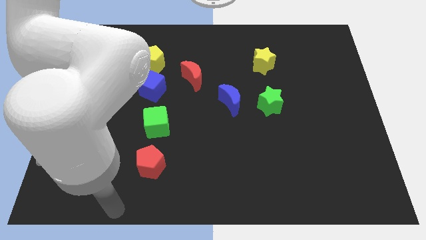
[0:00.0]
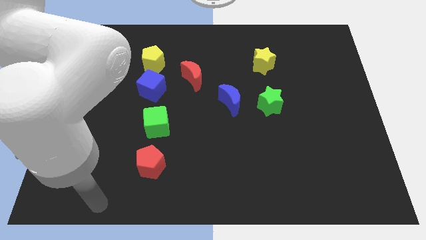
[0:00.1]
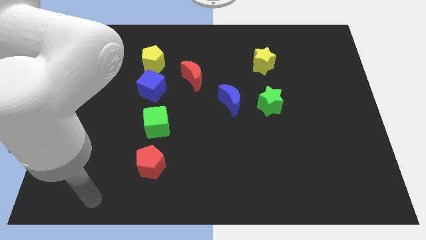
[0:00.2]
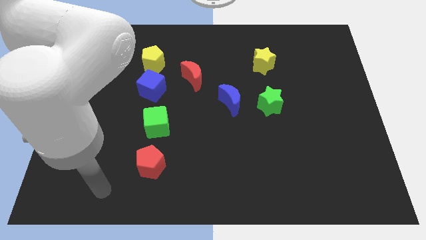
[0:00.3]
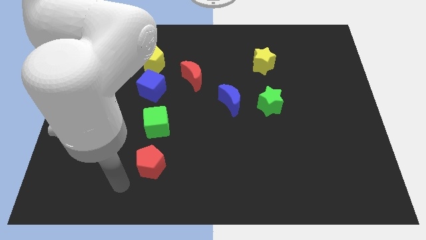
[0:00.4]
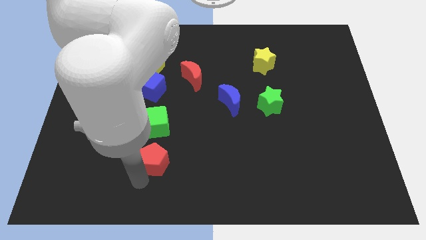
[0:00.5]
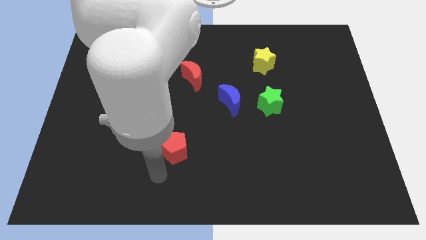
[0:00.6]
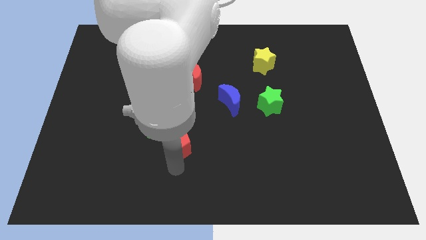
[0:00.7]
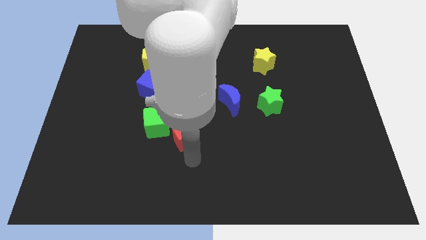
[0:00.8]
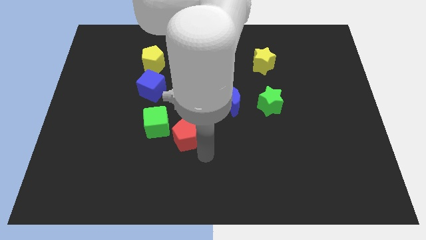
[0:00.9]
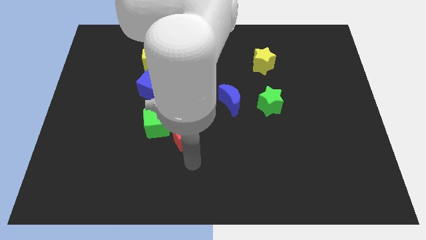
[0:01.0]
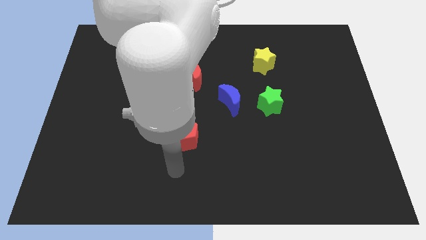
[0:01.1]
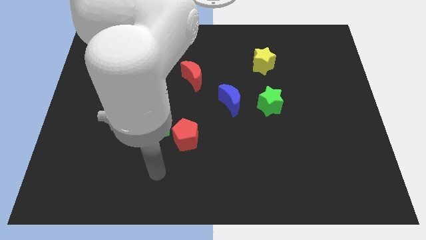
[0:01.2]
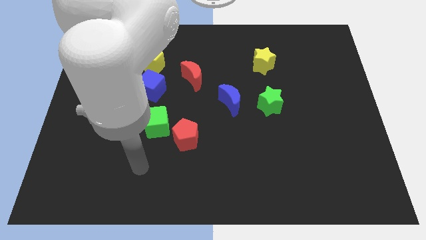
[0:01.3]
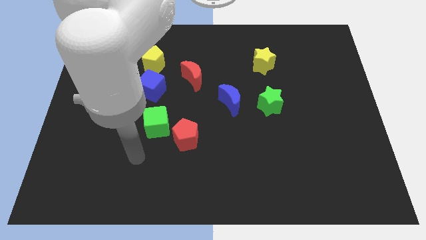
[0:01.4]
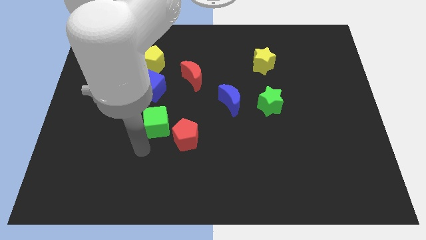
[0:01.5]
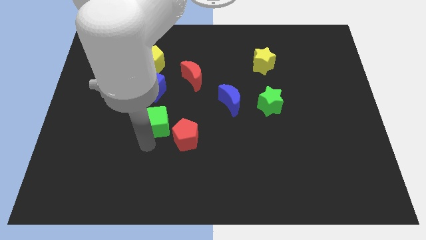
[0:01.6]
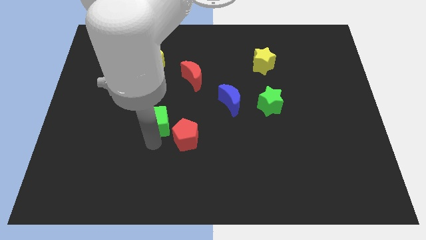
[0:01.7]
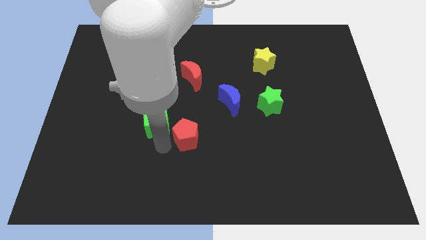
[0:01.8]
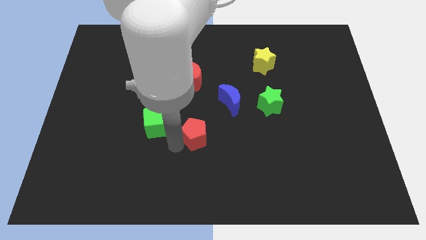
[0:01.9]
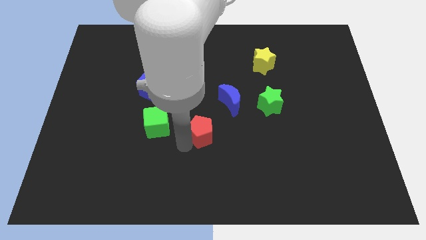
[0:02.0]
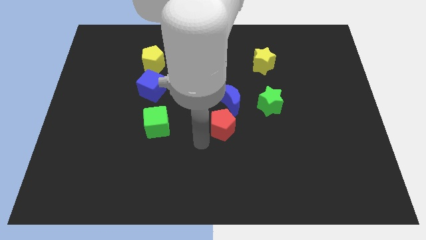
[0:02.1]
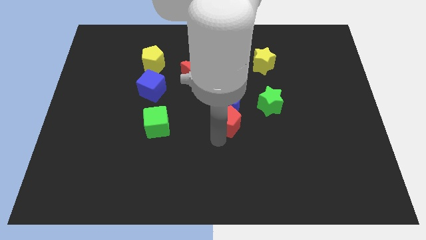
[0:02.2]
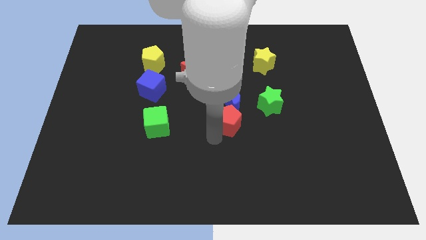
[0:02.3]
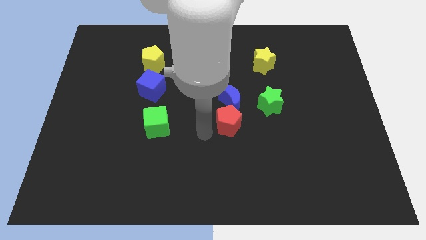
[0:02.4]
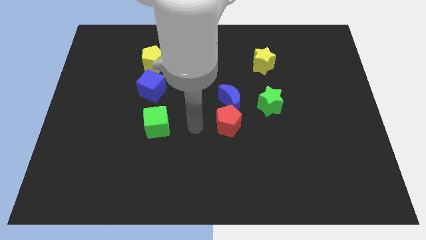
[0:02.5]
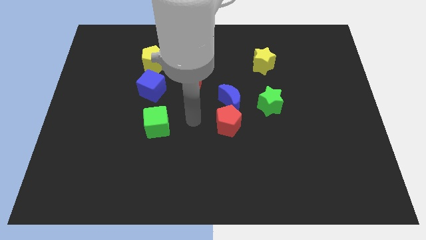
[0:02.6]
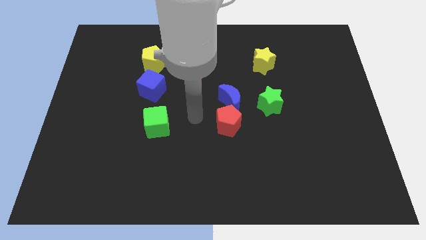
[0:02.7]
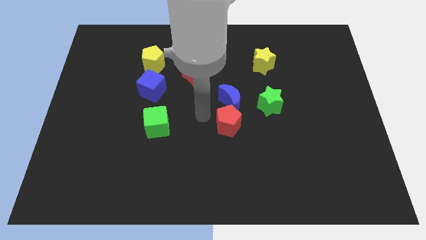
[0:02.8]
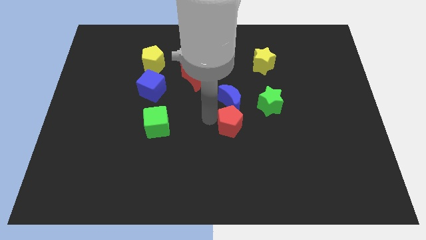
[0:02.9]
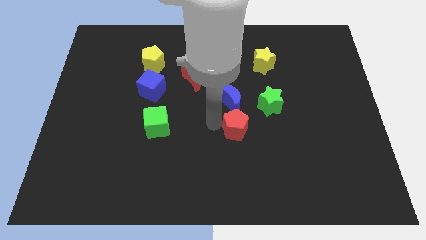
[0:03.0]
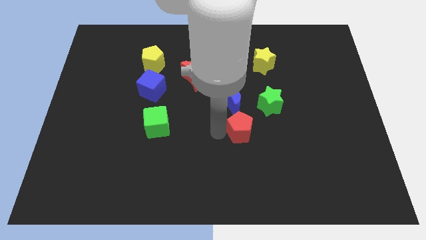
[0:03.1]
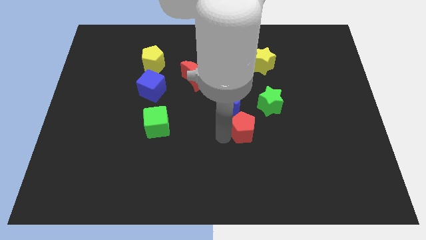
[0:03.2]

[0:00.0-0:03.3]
drag the red pentagon vertically below the blue moon

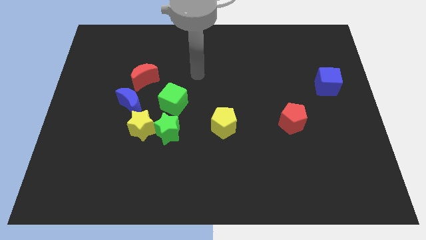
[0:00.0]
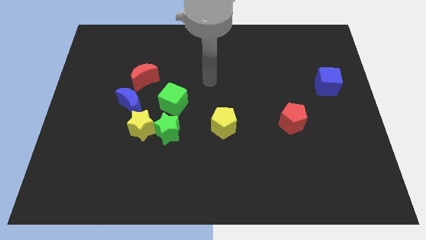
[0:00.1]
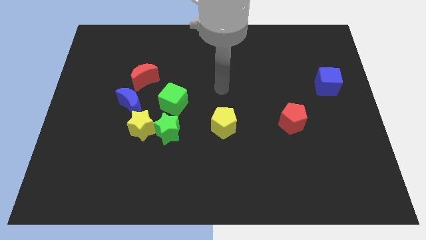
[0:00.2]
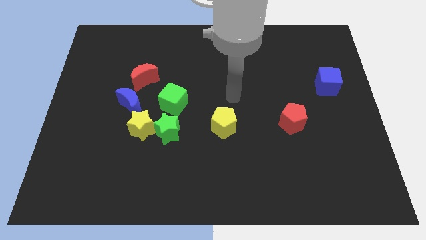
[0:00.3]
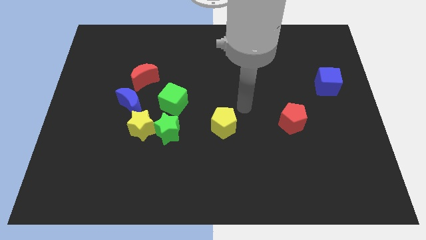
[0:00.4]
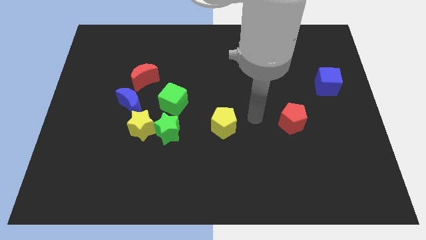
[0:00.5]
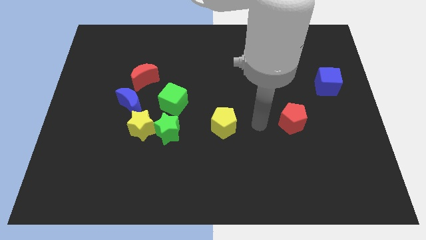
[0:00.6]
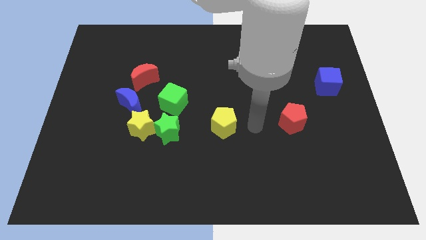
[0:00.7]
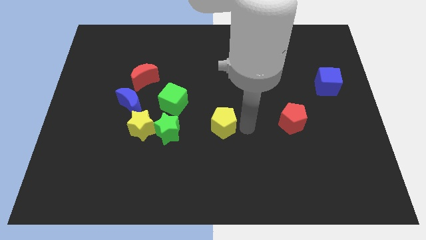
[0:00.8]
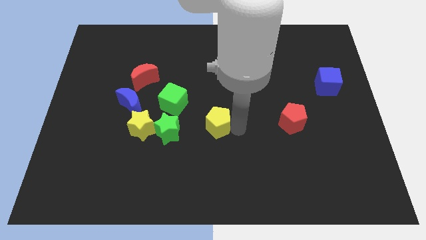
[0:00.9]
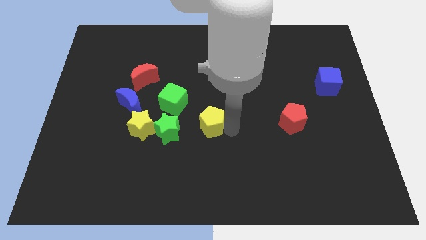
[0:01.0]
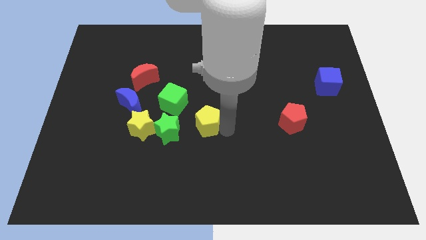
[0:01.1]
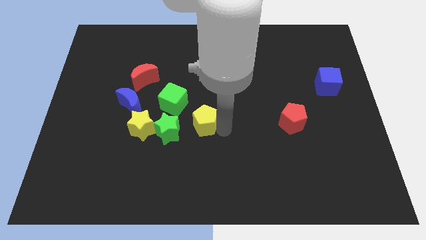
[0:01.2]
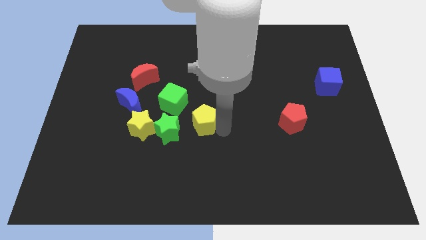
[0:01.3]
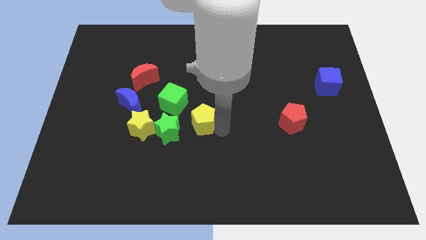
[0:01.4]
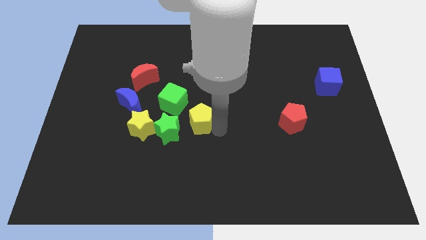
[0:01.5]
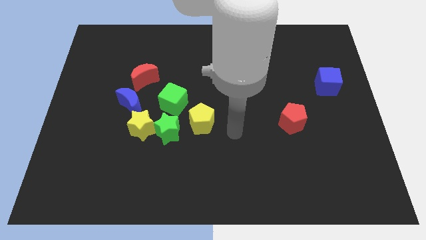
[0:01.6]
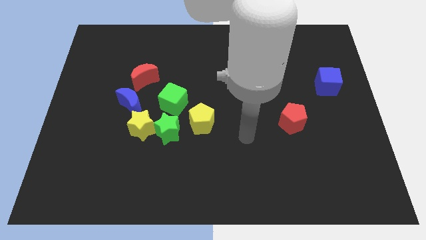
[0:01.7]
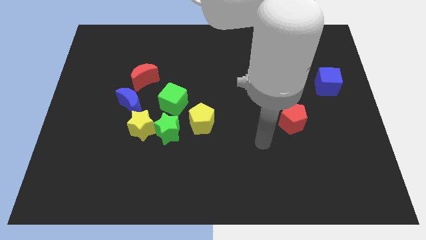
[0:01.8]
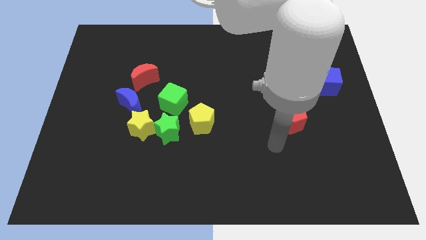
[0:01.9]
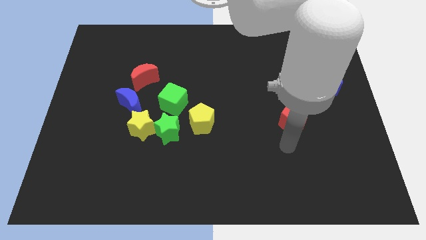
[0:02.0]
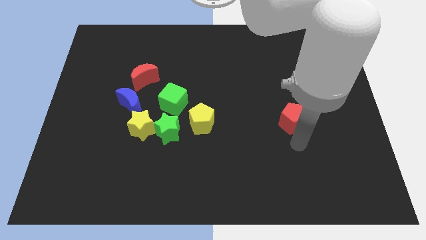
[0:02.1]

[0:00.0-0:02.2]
slightly push the yellow pentagon to the left

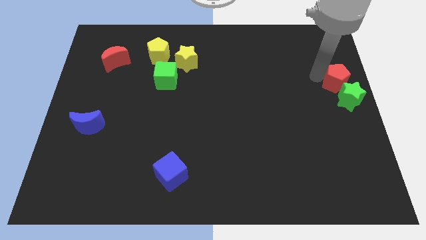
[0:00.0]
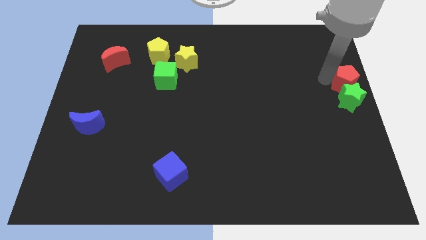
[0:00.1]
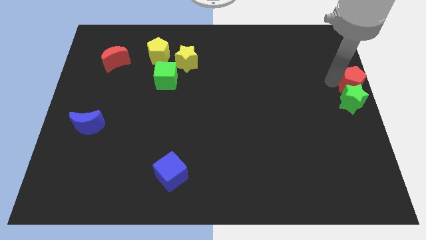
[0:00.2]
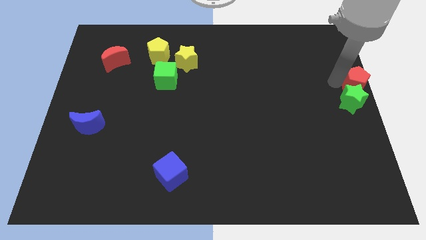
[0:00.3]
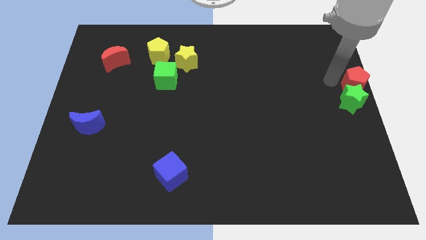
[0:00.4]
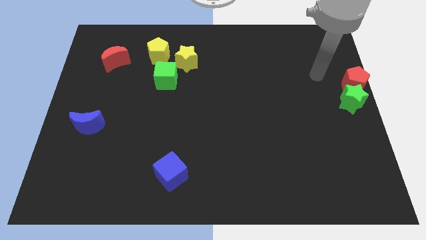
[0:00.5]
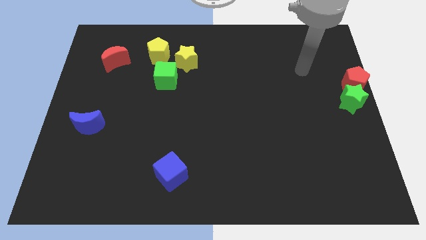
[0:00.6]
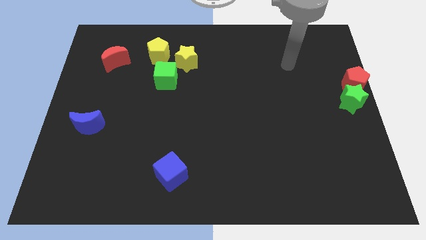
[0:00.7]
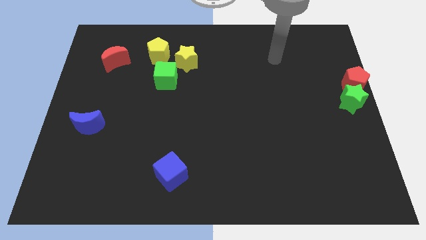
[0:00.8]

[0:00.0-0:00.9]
place the red pentagon above the green star

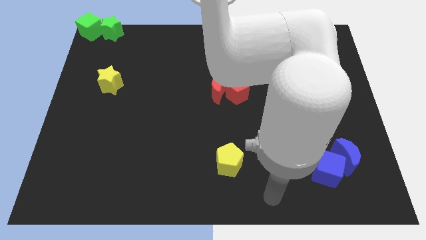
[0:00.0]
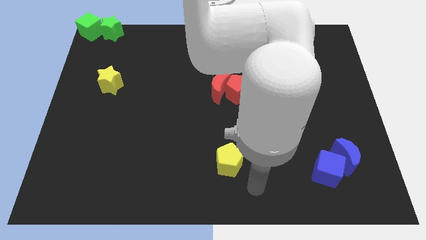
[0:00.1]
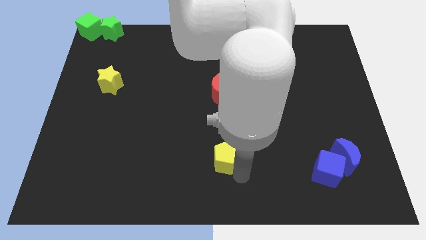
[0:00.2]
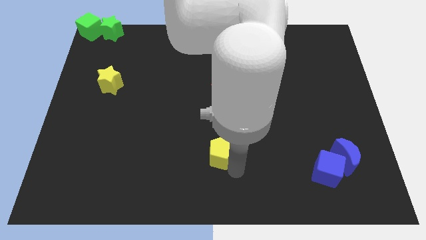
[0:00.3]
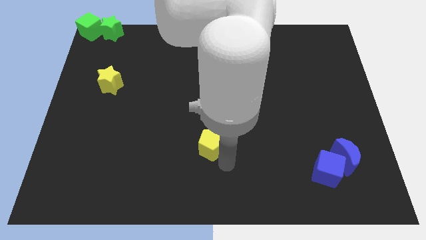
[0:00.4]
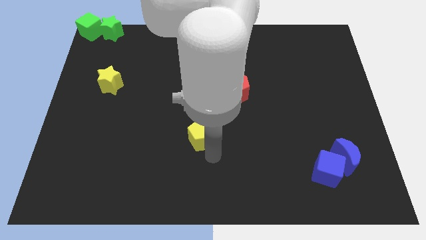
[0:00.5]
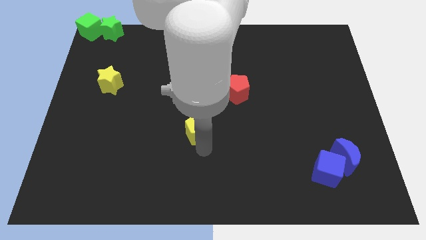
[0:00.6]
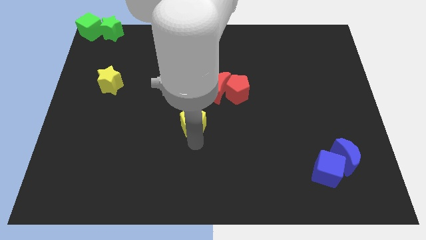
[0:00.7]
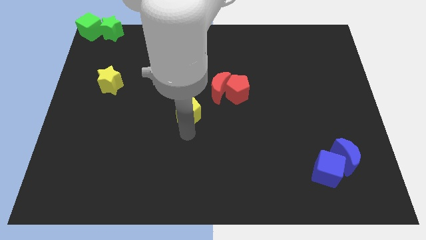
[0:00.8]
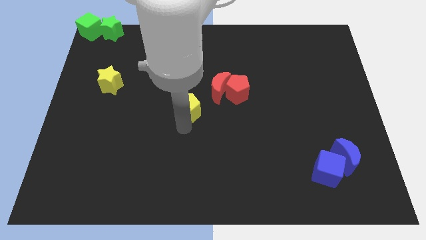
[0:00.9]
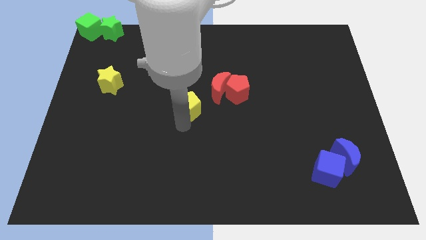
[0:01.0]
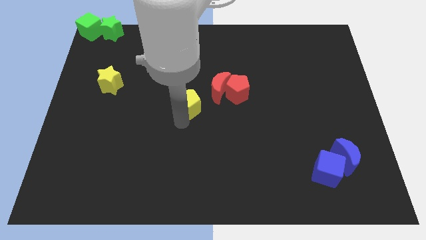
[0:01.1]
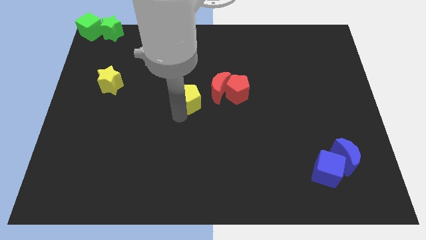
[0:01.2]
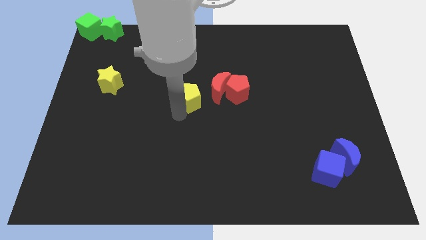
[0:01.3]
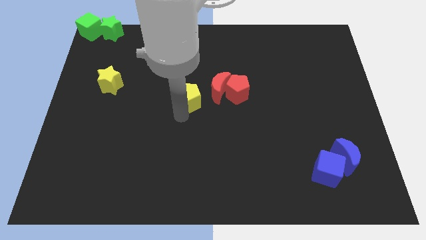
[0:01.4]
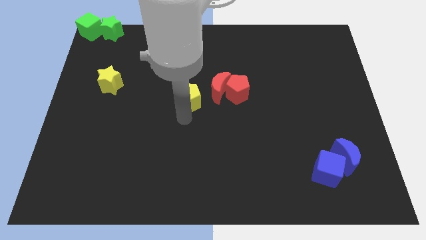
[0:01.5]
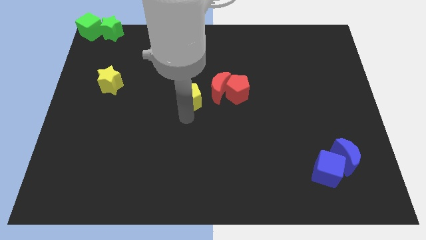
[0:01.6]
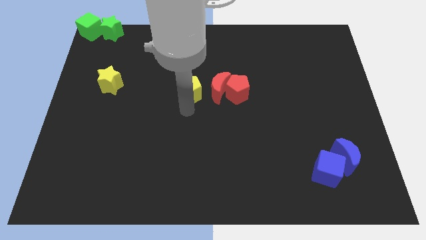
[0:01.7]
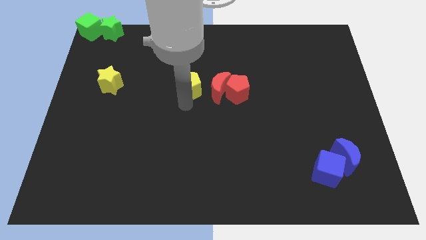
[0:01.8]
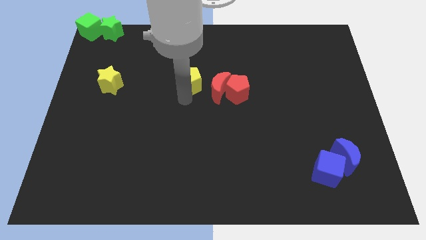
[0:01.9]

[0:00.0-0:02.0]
push yellow star beside red crescent

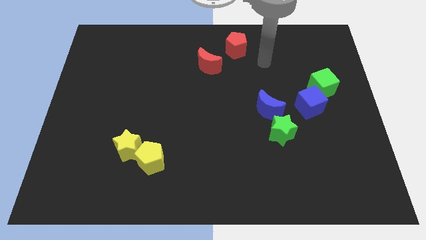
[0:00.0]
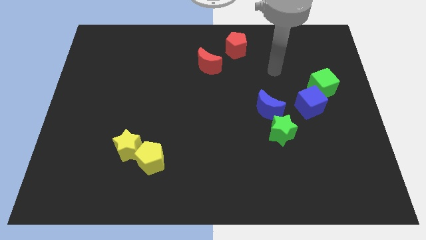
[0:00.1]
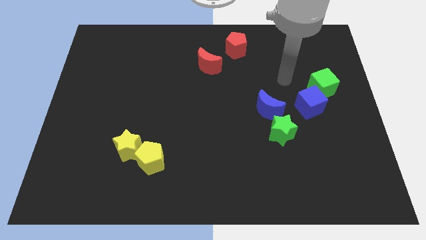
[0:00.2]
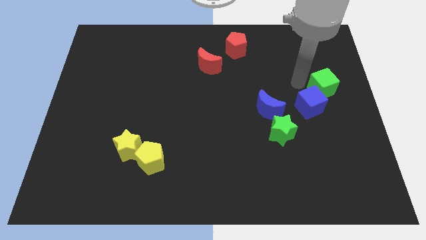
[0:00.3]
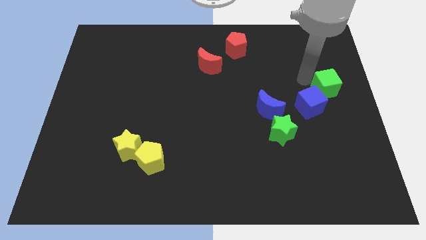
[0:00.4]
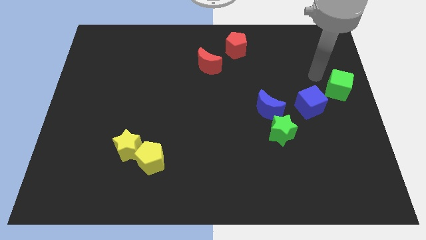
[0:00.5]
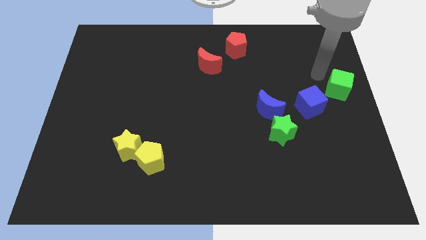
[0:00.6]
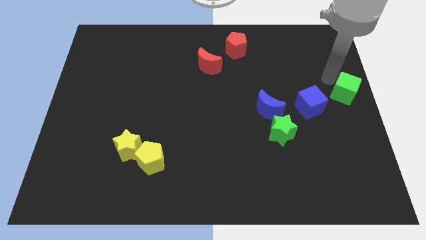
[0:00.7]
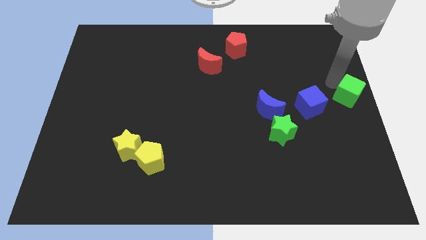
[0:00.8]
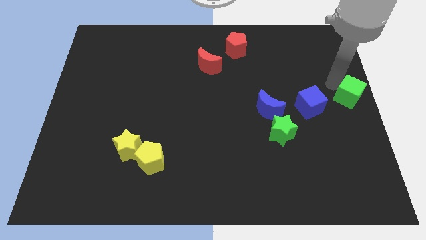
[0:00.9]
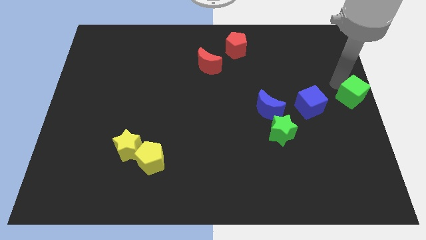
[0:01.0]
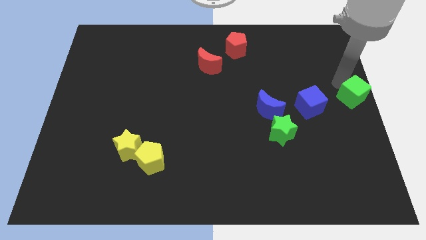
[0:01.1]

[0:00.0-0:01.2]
push the green cube to the left side of the board
